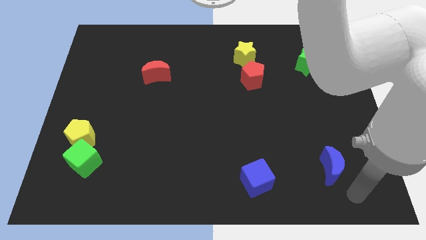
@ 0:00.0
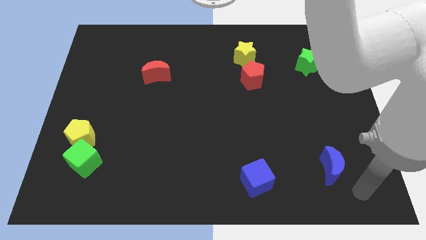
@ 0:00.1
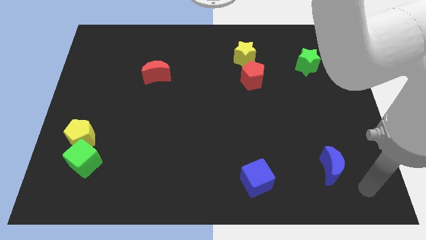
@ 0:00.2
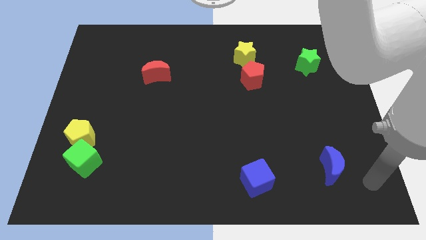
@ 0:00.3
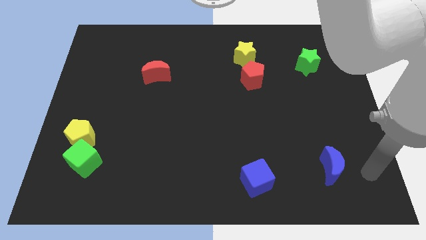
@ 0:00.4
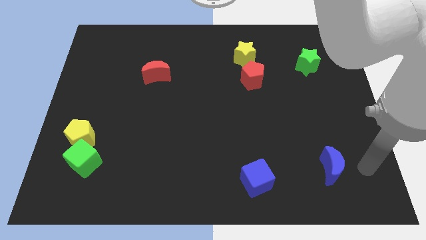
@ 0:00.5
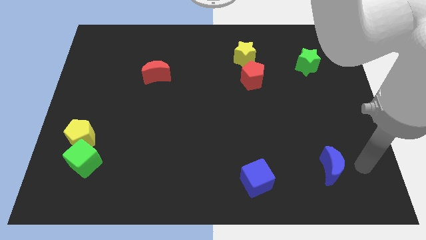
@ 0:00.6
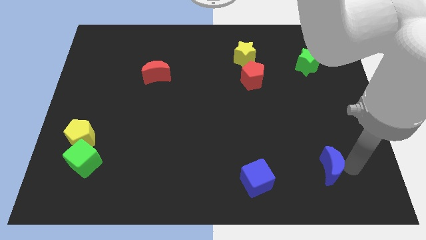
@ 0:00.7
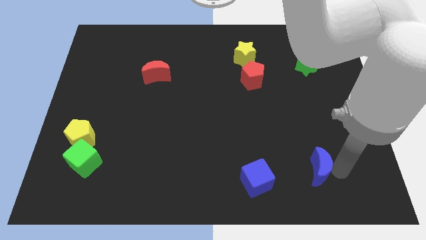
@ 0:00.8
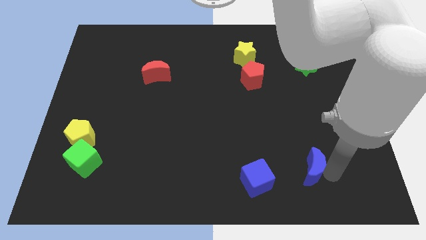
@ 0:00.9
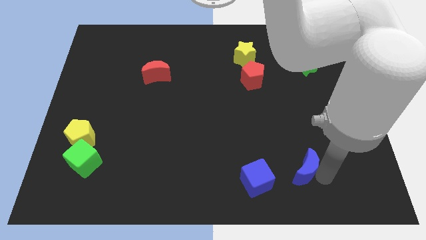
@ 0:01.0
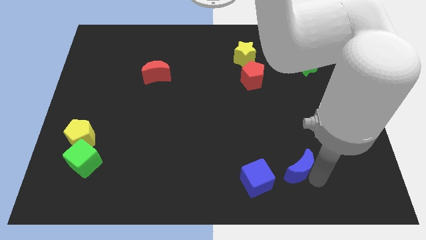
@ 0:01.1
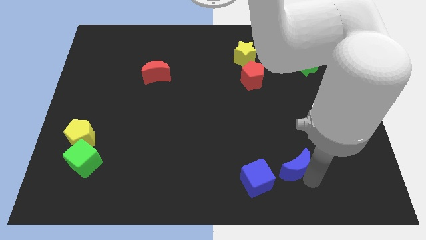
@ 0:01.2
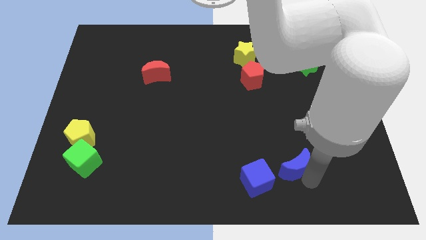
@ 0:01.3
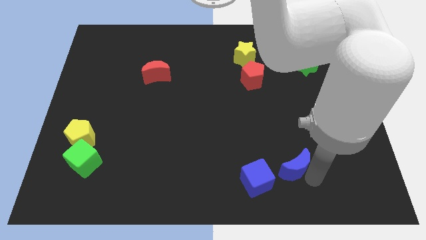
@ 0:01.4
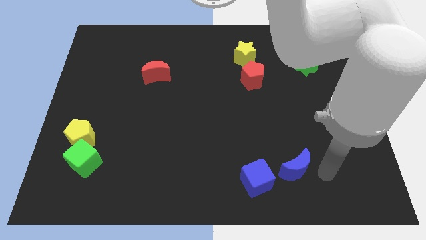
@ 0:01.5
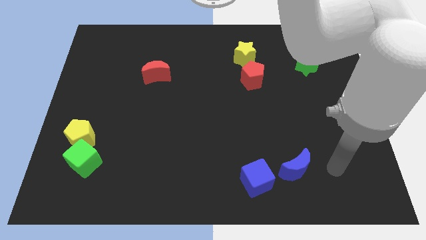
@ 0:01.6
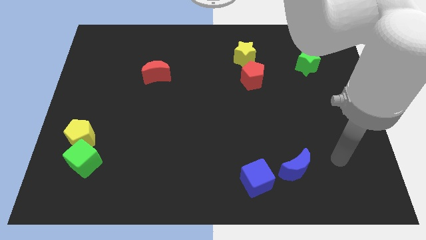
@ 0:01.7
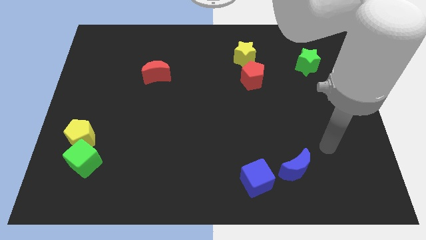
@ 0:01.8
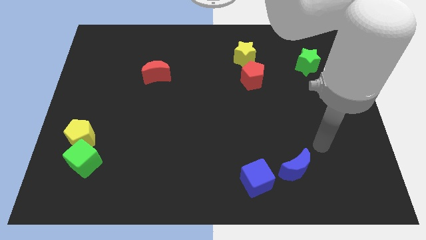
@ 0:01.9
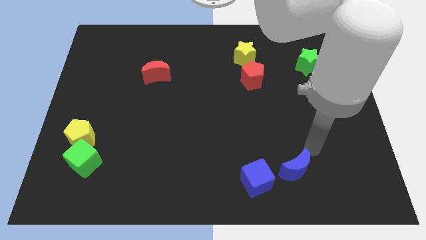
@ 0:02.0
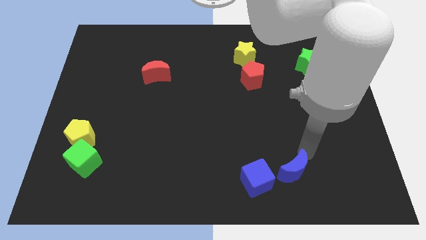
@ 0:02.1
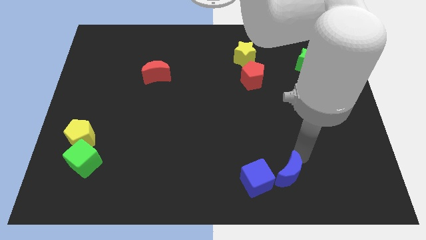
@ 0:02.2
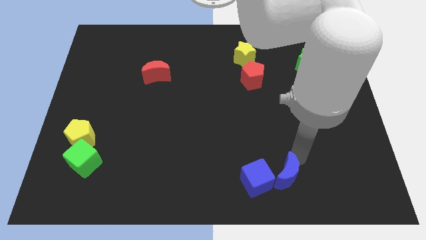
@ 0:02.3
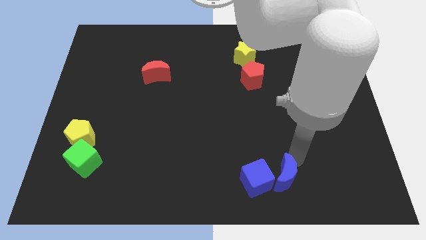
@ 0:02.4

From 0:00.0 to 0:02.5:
place the blue crescent beside the blue cube

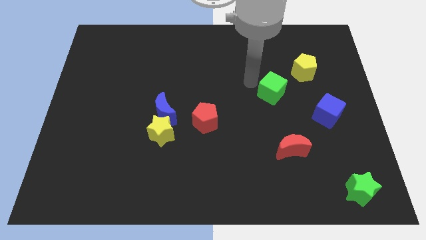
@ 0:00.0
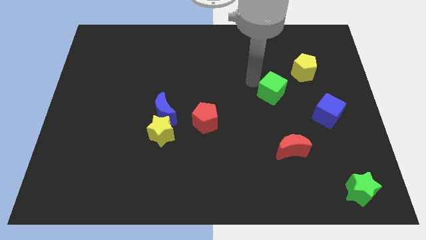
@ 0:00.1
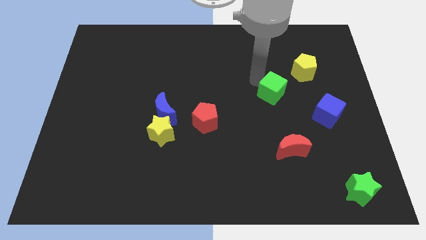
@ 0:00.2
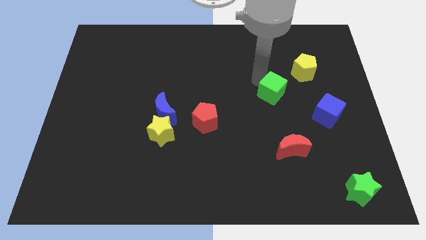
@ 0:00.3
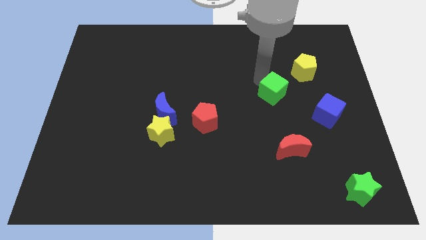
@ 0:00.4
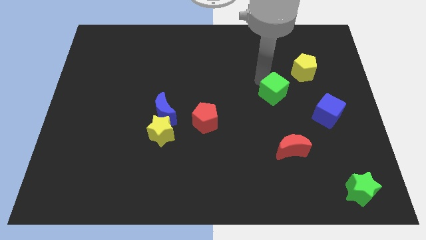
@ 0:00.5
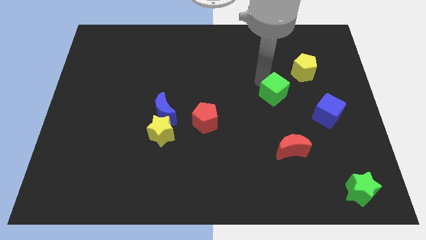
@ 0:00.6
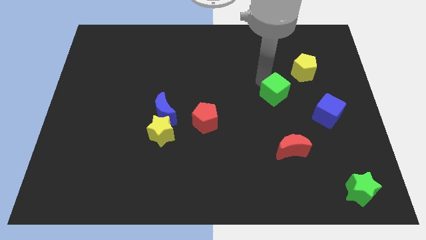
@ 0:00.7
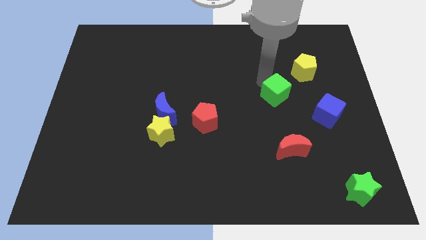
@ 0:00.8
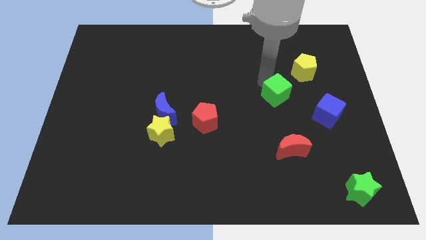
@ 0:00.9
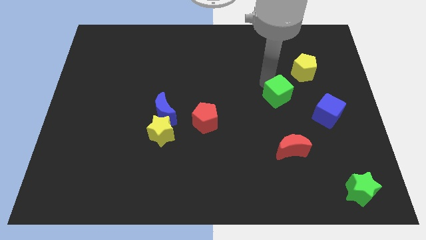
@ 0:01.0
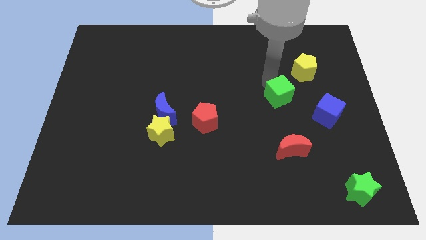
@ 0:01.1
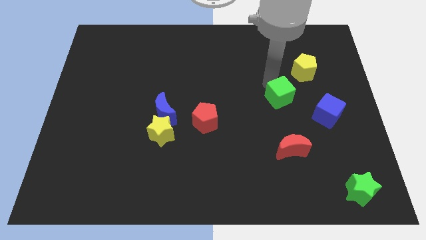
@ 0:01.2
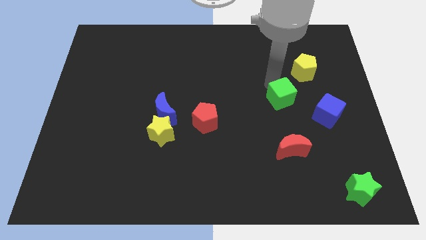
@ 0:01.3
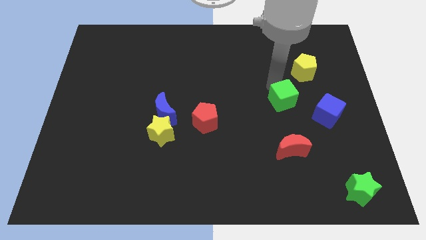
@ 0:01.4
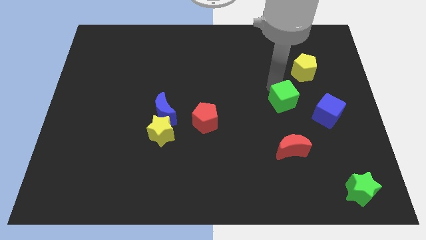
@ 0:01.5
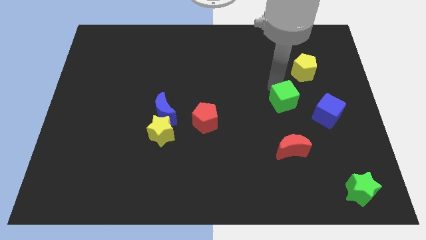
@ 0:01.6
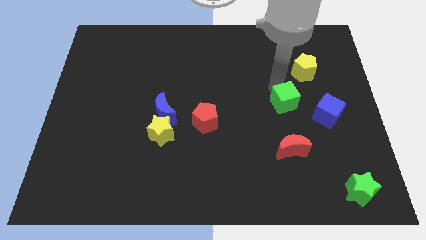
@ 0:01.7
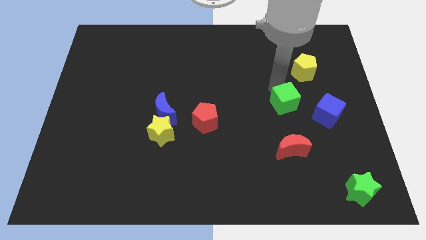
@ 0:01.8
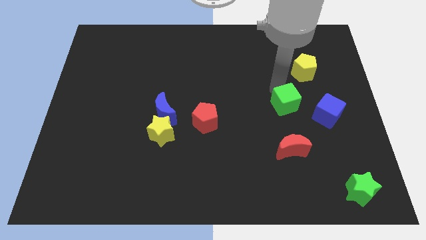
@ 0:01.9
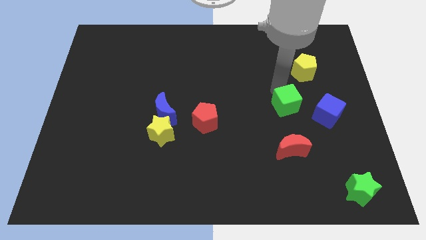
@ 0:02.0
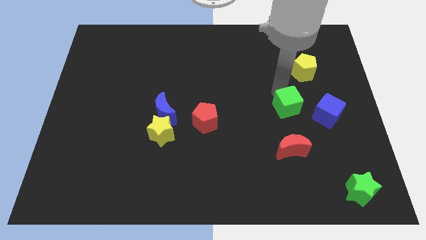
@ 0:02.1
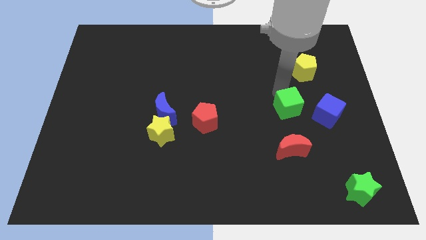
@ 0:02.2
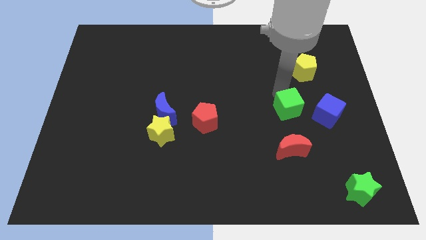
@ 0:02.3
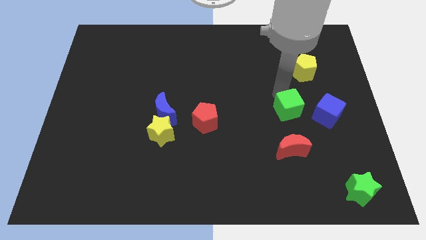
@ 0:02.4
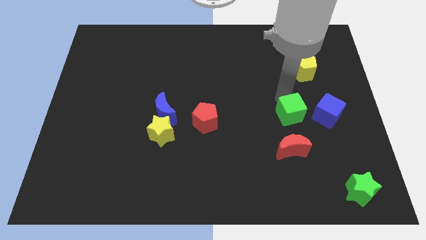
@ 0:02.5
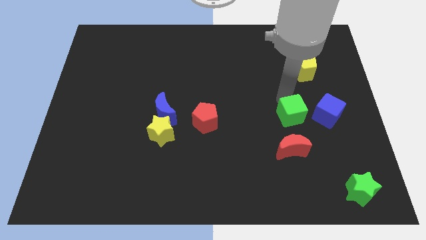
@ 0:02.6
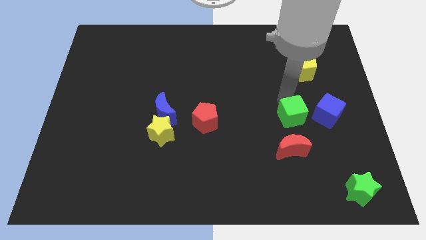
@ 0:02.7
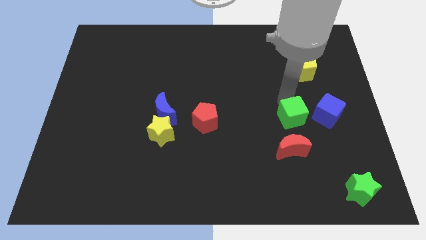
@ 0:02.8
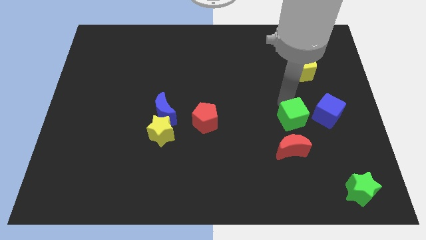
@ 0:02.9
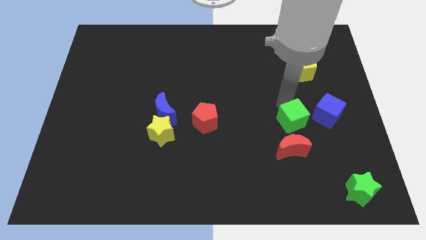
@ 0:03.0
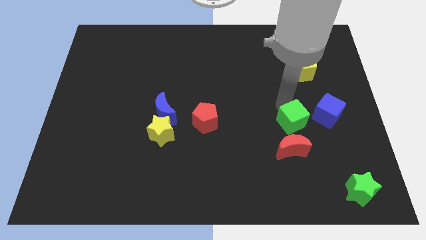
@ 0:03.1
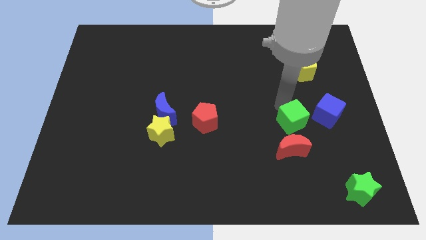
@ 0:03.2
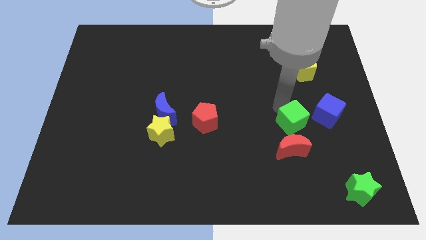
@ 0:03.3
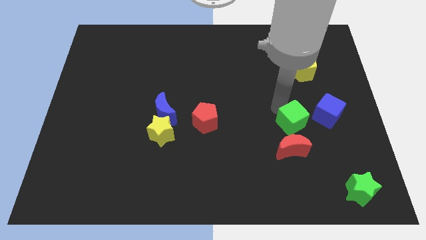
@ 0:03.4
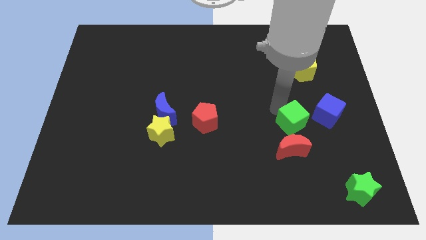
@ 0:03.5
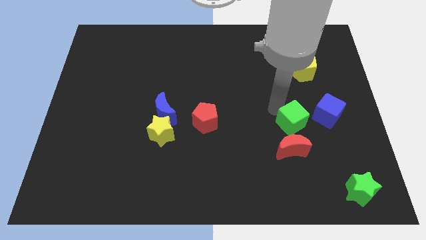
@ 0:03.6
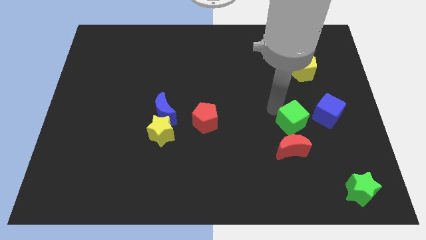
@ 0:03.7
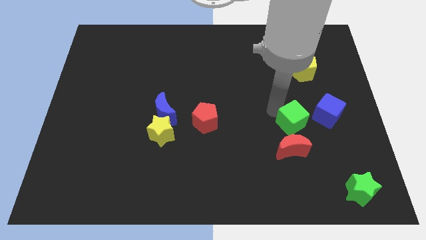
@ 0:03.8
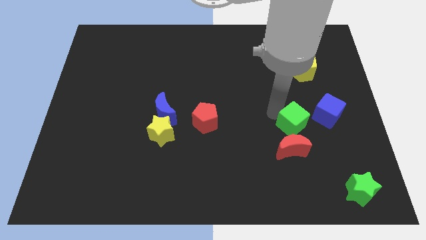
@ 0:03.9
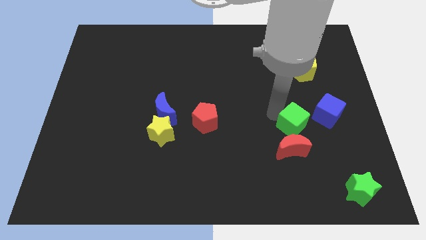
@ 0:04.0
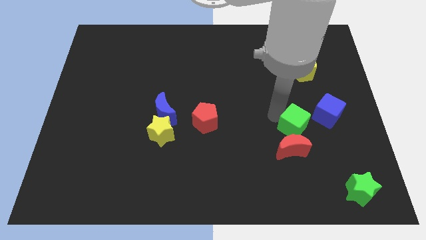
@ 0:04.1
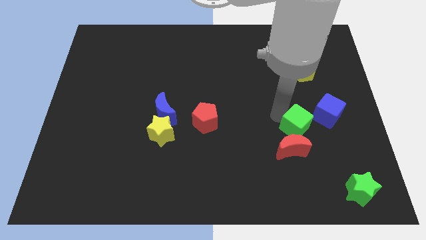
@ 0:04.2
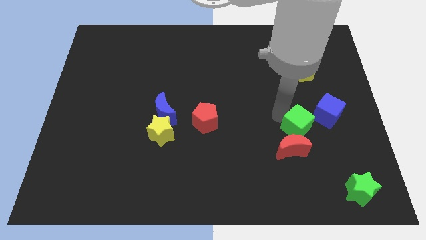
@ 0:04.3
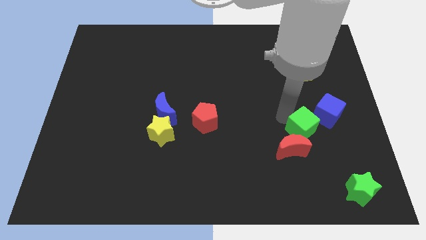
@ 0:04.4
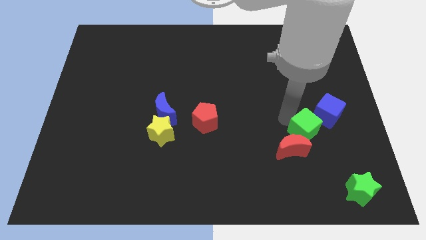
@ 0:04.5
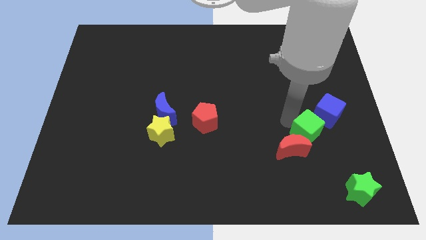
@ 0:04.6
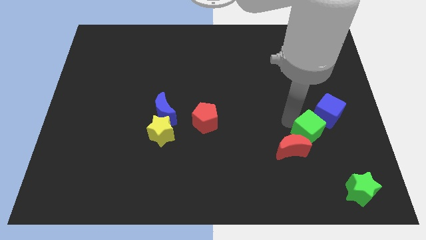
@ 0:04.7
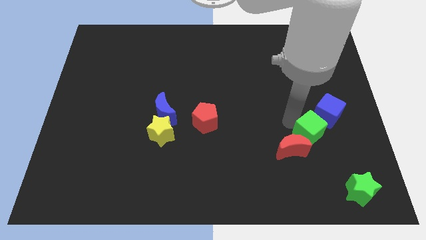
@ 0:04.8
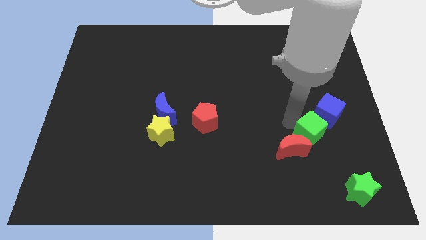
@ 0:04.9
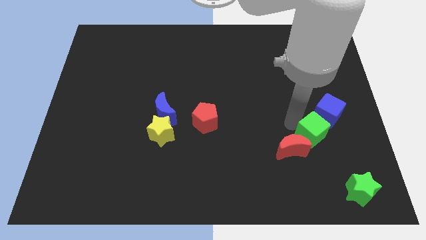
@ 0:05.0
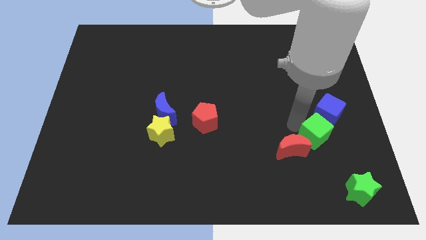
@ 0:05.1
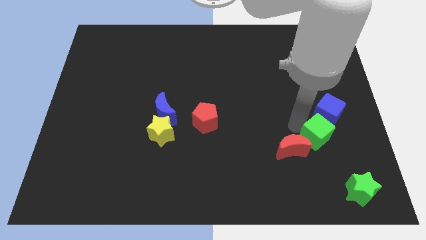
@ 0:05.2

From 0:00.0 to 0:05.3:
move the green cube towards the green star

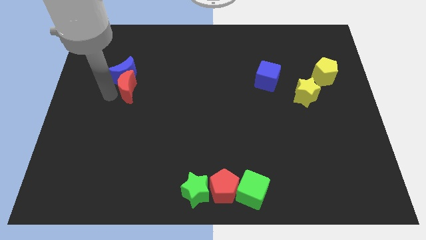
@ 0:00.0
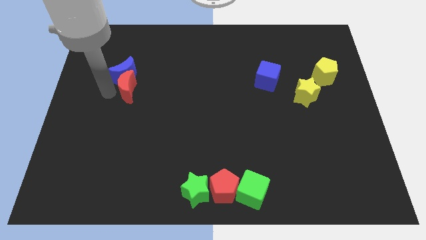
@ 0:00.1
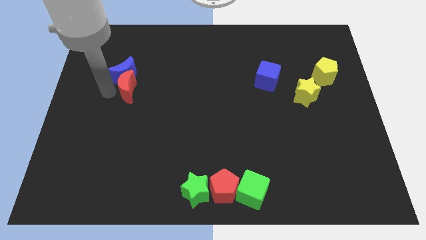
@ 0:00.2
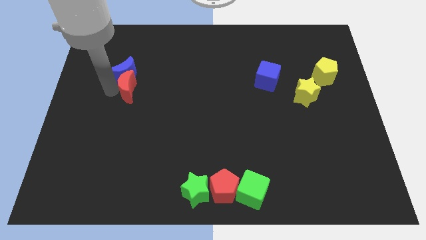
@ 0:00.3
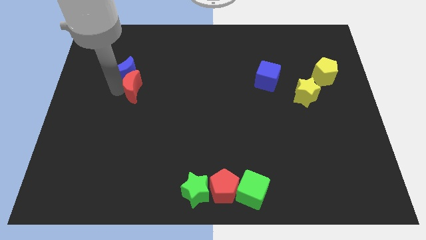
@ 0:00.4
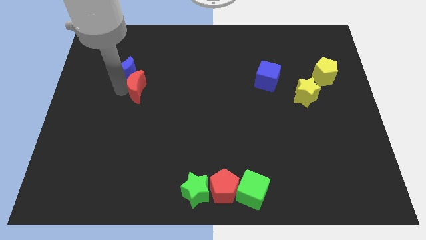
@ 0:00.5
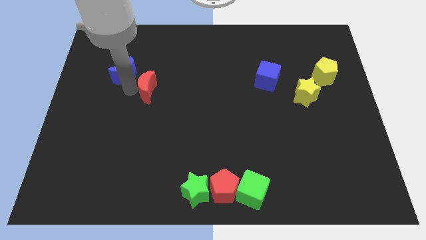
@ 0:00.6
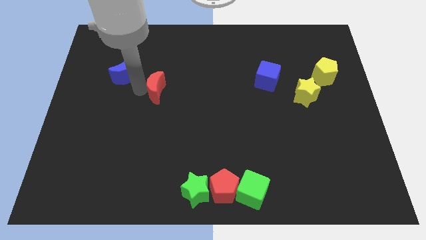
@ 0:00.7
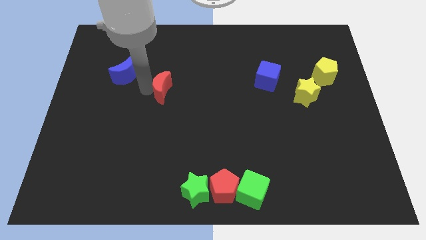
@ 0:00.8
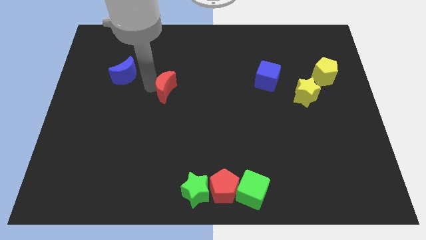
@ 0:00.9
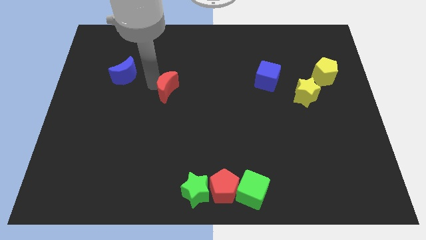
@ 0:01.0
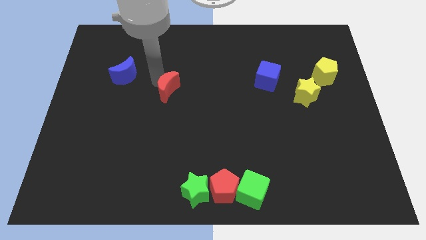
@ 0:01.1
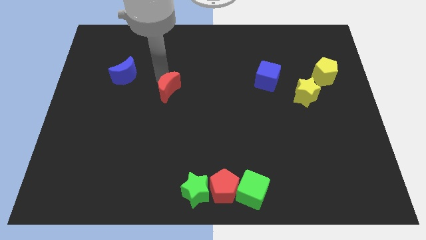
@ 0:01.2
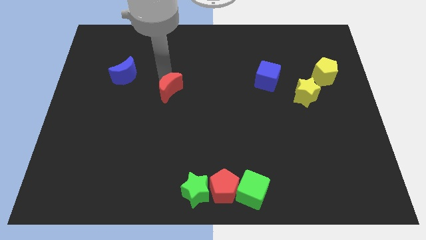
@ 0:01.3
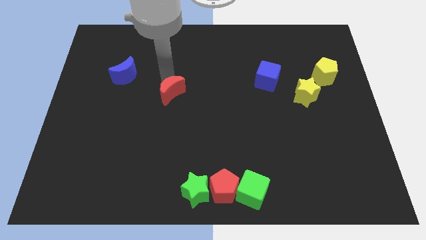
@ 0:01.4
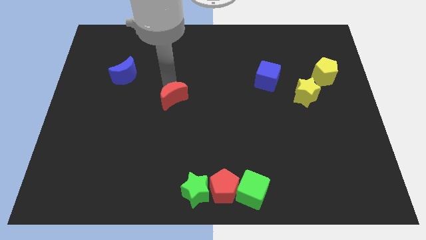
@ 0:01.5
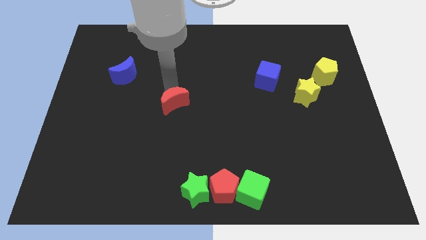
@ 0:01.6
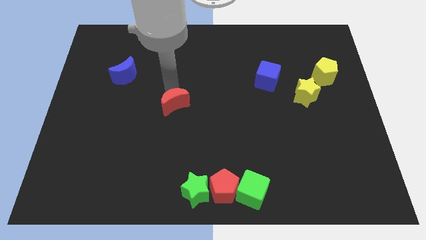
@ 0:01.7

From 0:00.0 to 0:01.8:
separate the red moon from the blue moon
